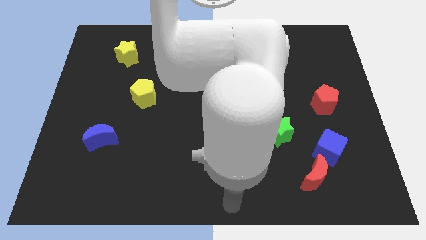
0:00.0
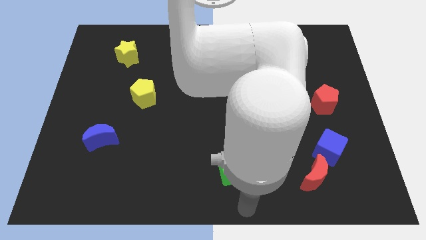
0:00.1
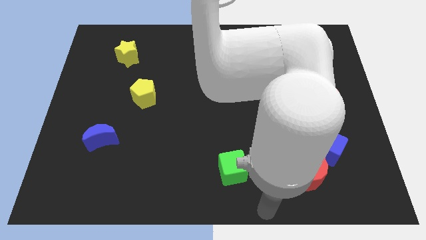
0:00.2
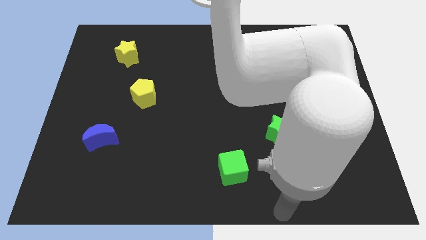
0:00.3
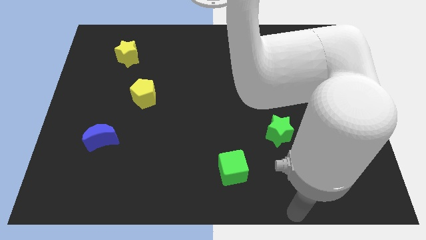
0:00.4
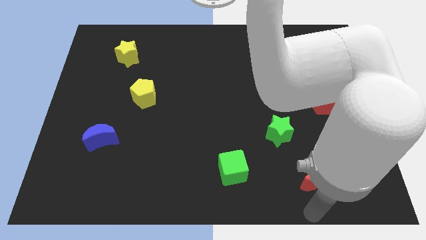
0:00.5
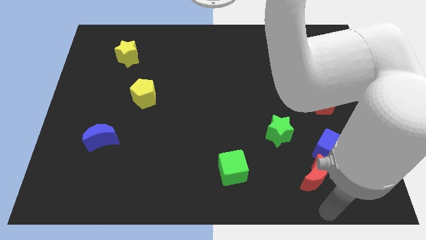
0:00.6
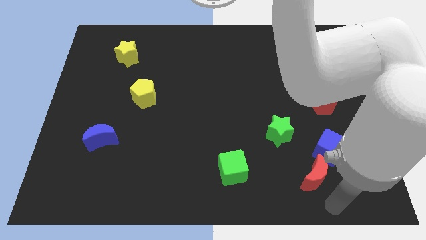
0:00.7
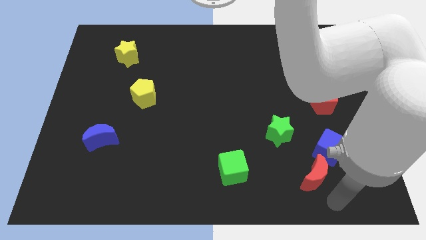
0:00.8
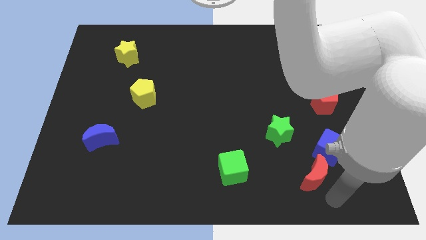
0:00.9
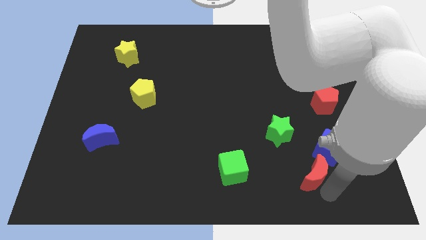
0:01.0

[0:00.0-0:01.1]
place the arm near the red moon

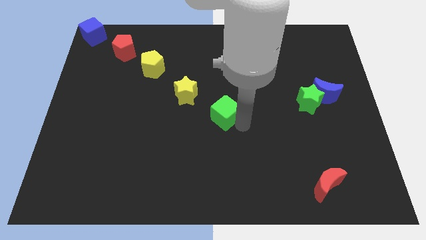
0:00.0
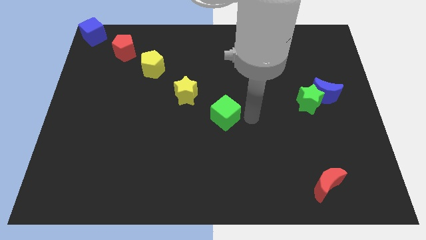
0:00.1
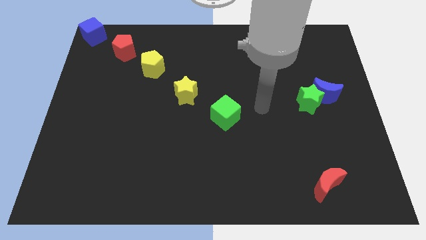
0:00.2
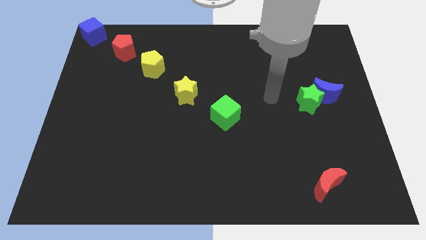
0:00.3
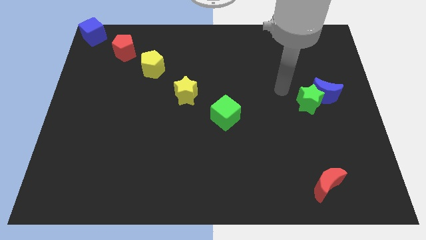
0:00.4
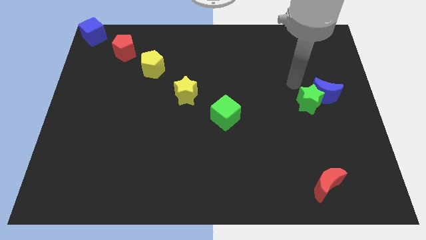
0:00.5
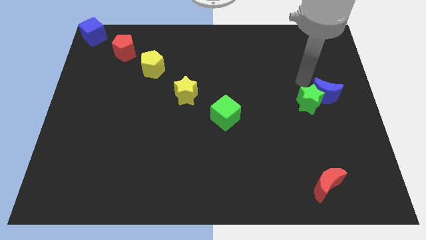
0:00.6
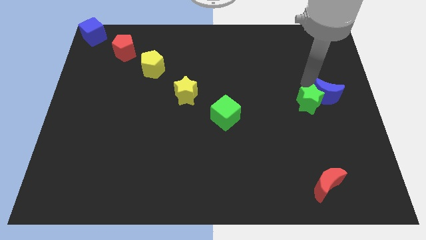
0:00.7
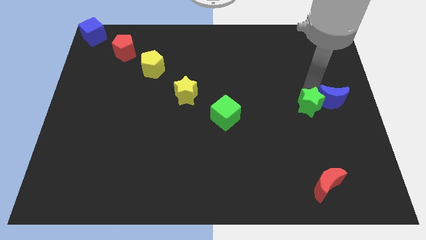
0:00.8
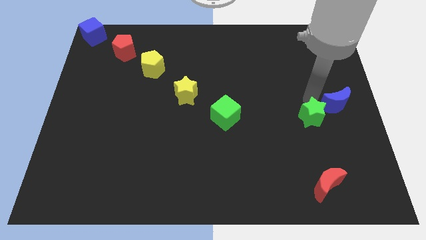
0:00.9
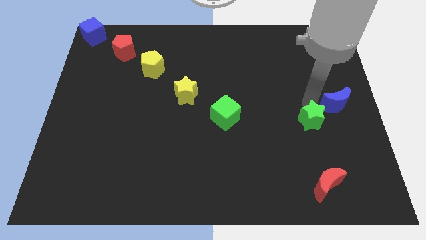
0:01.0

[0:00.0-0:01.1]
push the green star slightly to the bottom

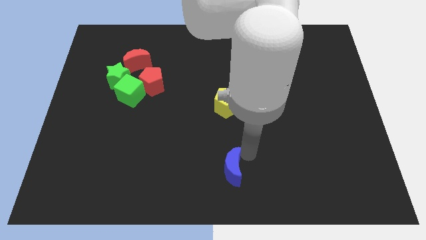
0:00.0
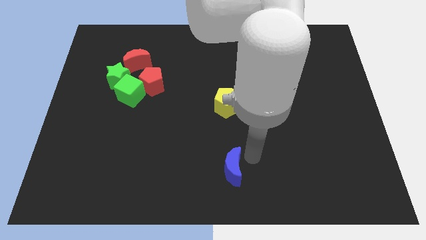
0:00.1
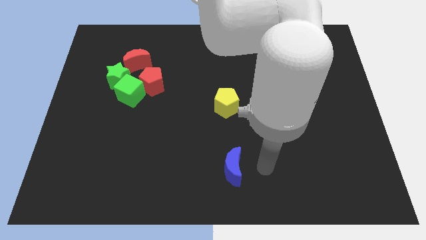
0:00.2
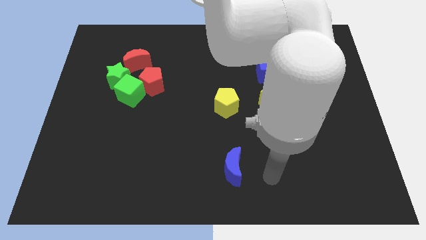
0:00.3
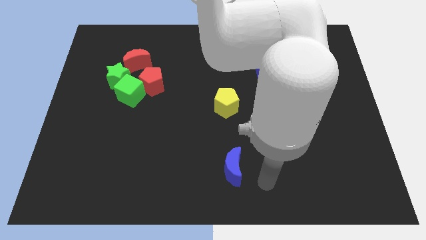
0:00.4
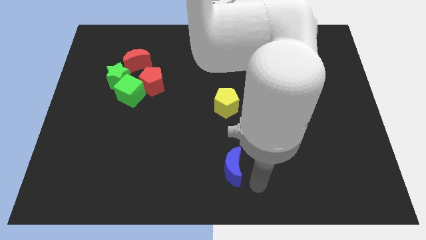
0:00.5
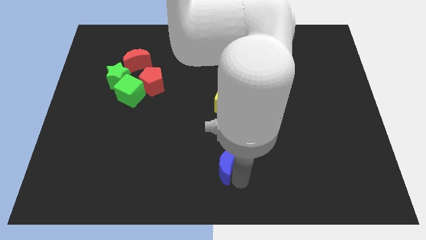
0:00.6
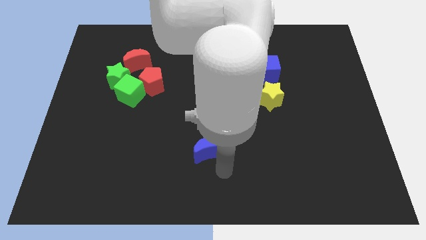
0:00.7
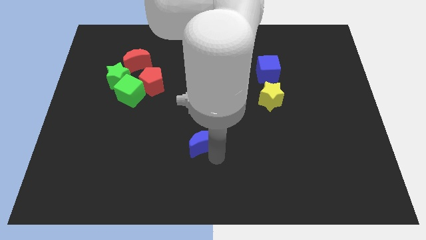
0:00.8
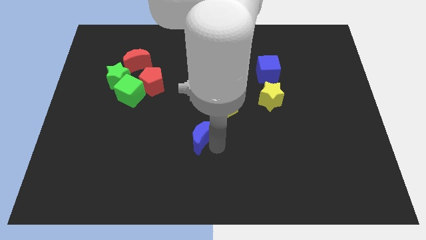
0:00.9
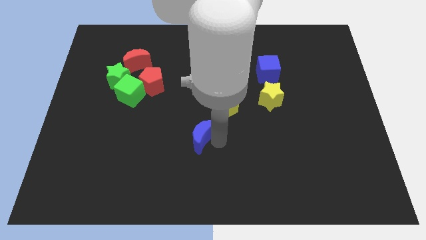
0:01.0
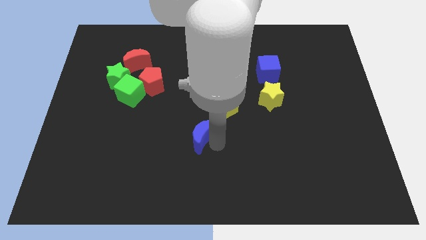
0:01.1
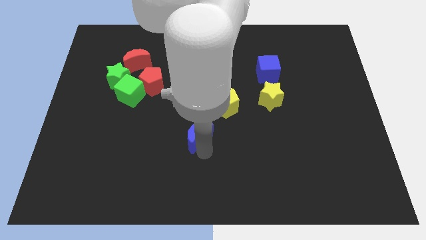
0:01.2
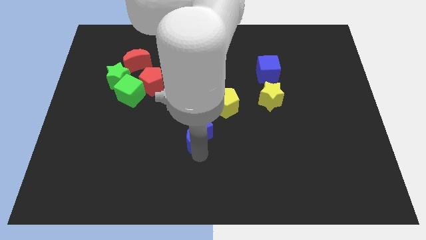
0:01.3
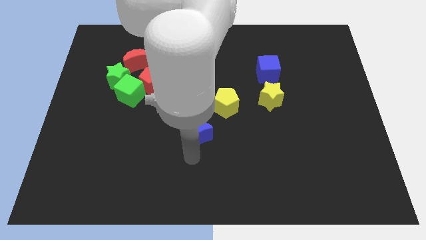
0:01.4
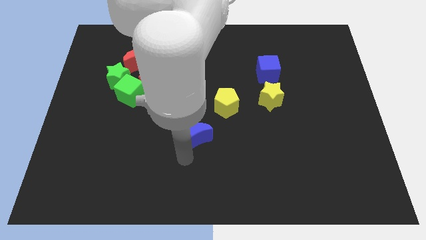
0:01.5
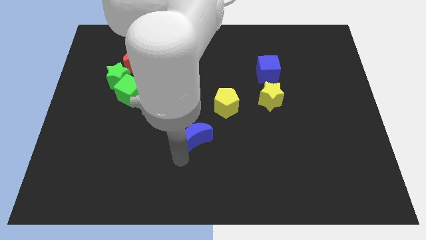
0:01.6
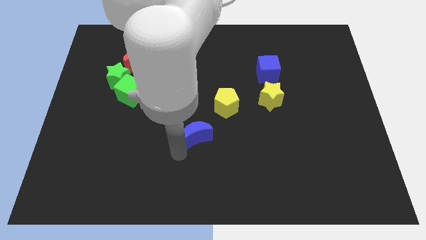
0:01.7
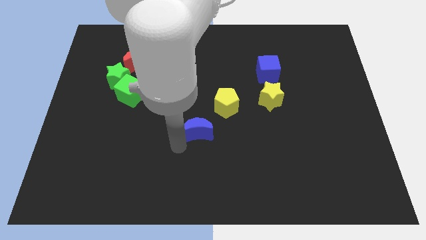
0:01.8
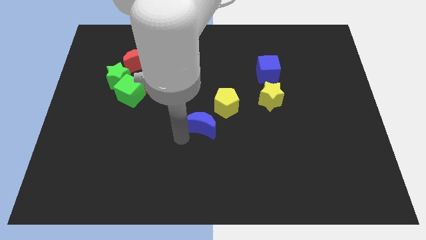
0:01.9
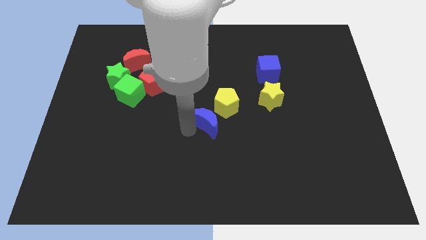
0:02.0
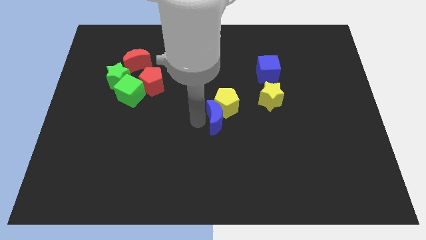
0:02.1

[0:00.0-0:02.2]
place blue crescent near yellow pentagon

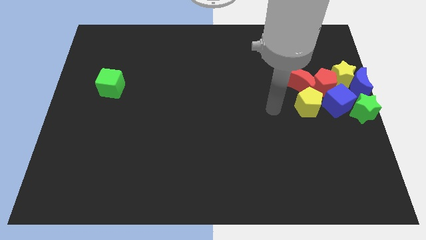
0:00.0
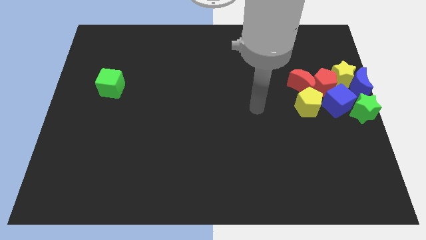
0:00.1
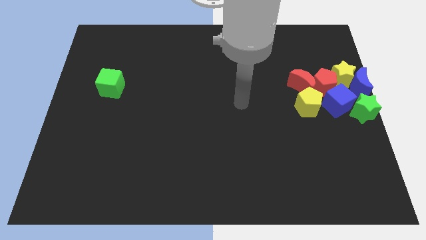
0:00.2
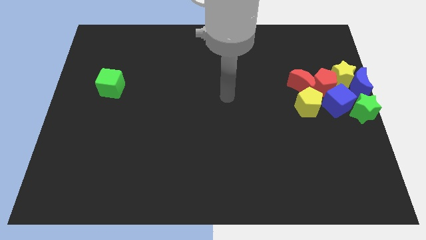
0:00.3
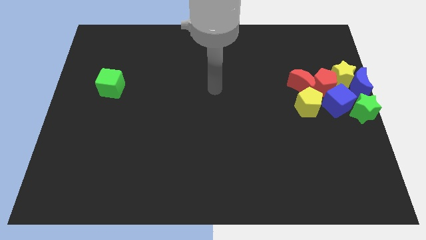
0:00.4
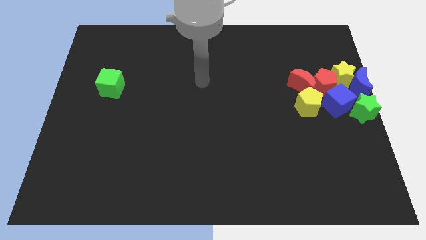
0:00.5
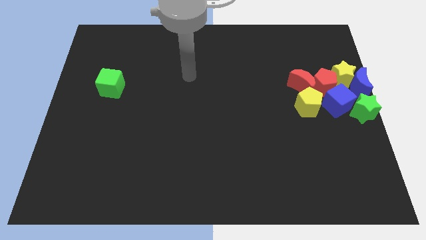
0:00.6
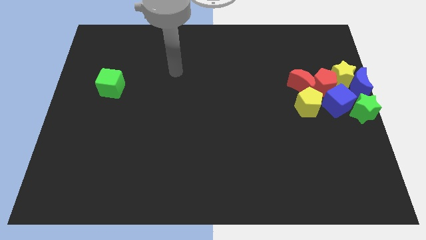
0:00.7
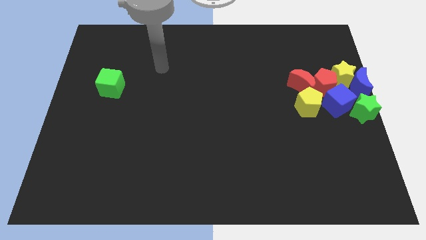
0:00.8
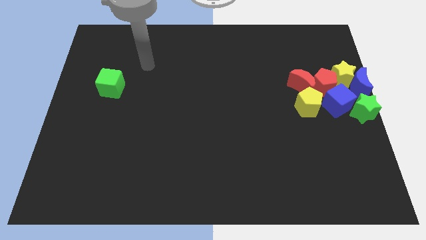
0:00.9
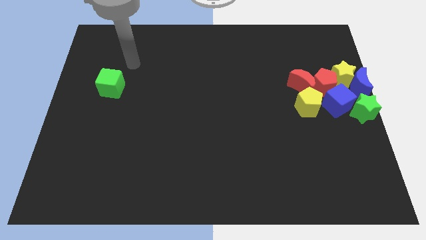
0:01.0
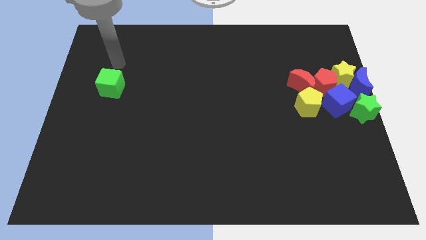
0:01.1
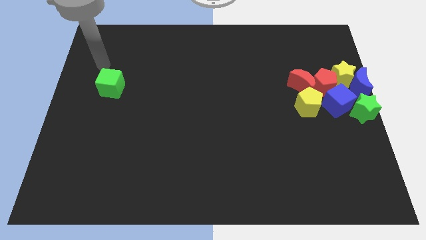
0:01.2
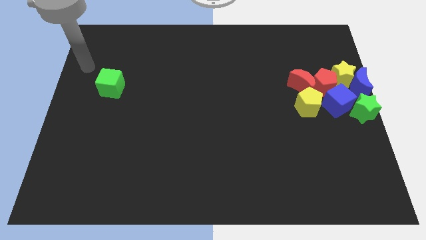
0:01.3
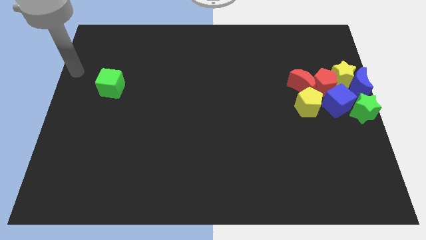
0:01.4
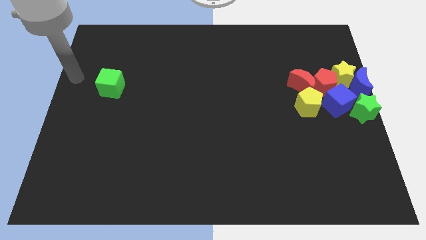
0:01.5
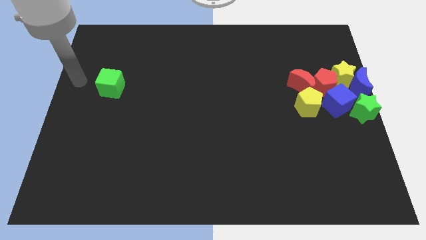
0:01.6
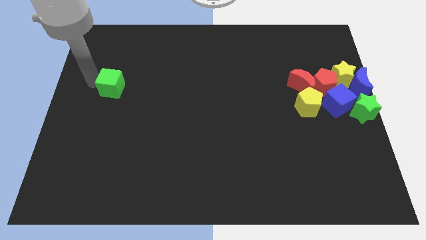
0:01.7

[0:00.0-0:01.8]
move your arm to the left of the green cube

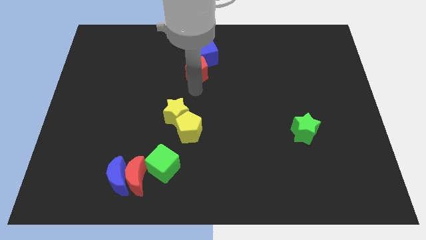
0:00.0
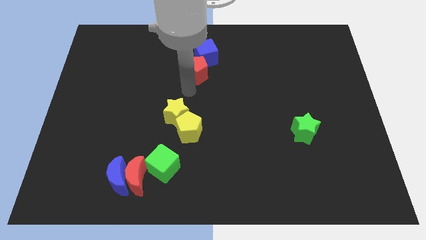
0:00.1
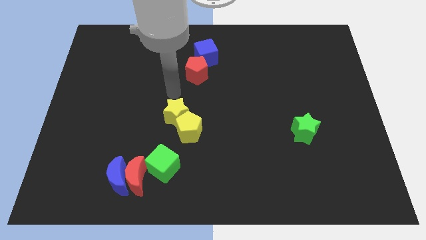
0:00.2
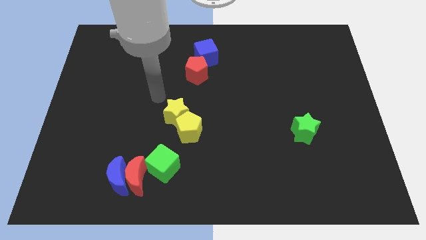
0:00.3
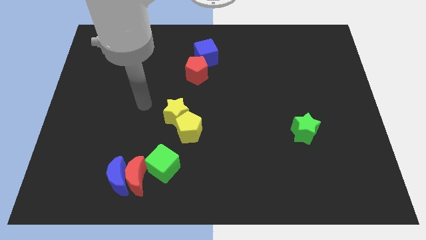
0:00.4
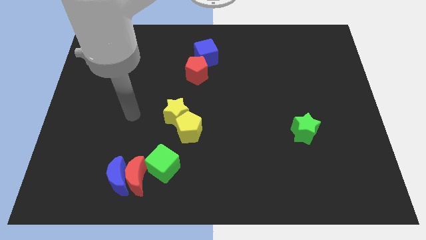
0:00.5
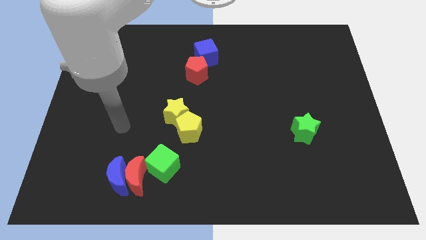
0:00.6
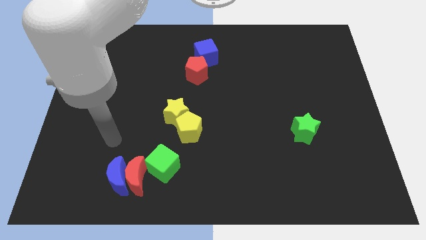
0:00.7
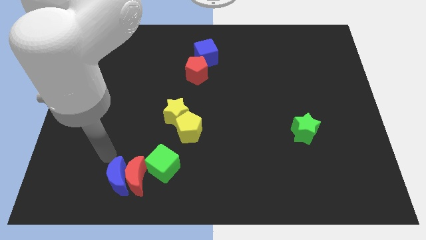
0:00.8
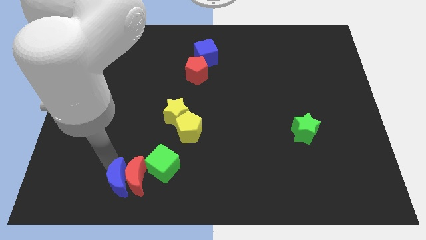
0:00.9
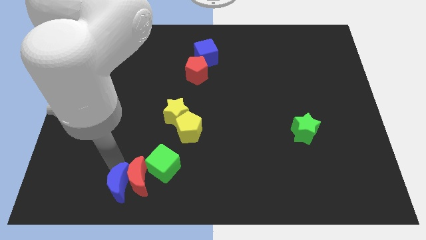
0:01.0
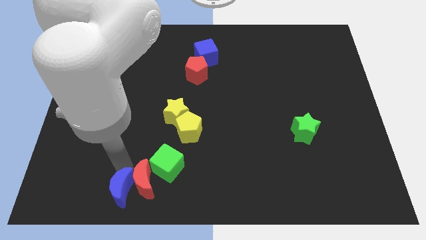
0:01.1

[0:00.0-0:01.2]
move your hand towards the blue moon

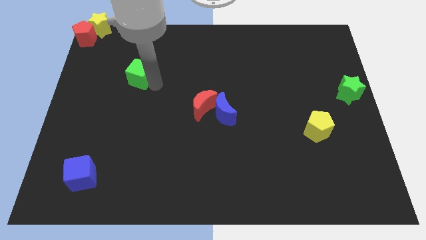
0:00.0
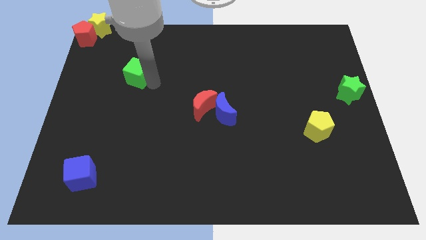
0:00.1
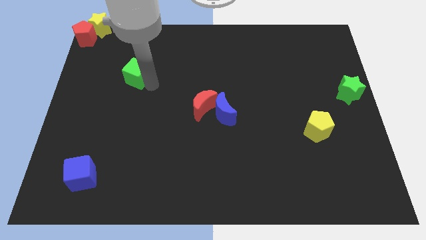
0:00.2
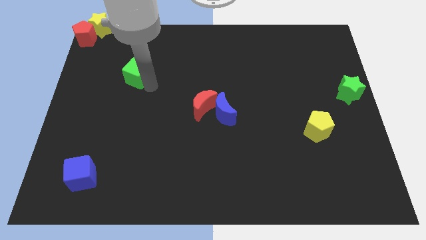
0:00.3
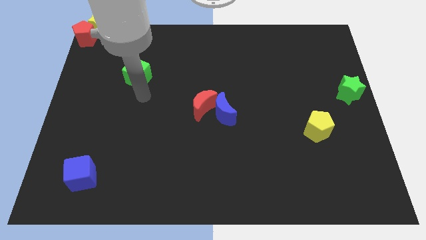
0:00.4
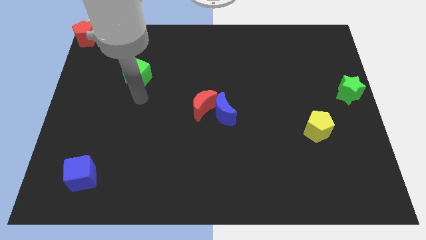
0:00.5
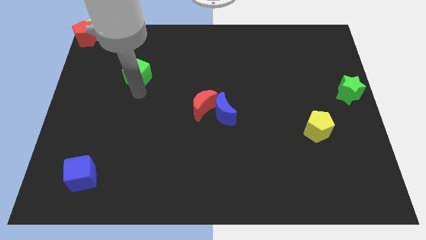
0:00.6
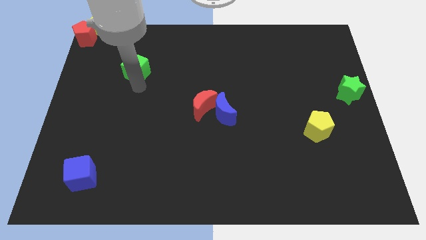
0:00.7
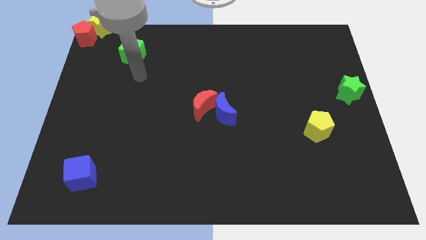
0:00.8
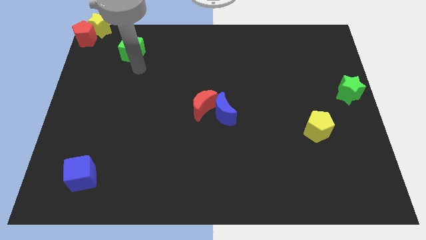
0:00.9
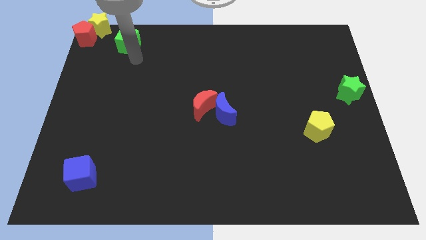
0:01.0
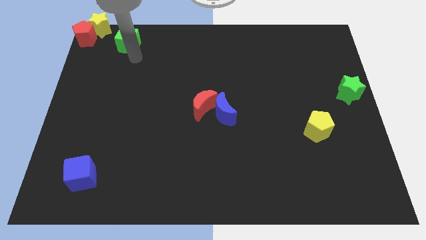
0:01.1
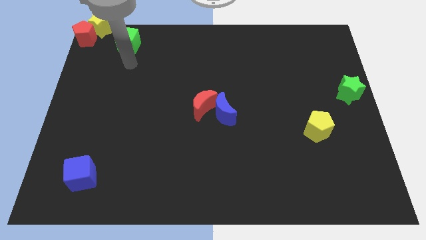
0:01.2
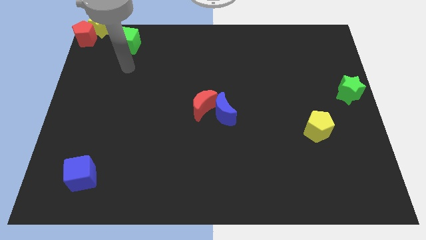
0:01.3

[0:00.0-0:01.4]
push the green cube to the right side of the red pentagon
